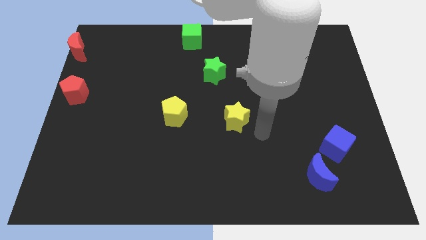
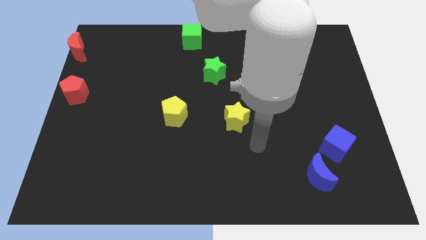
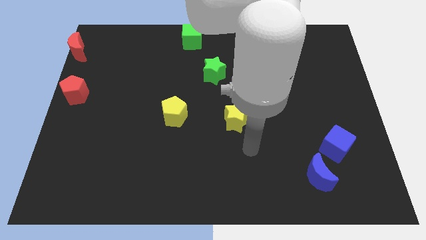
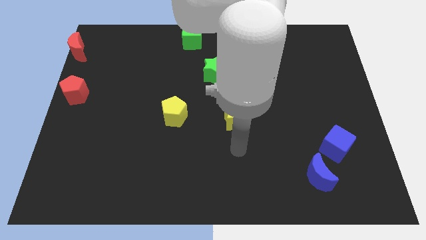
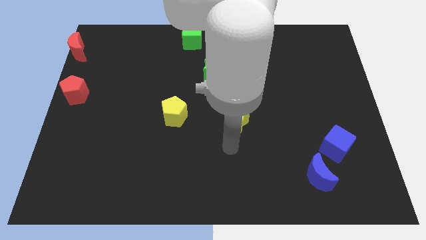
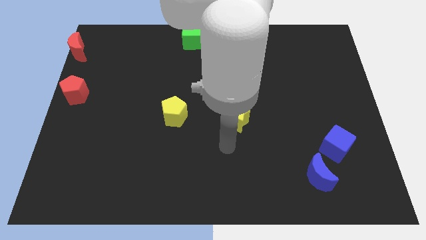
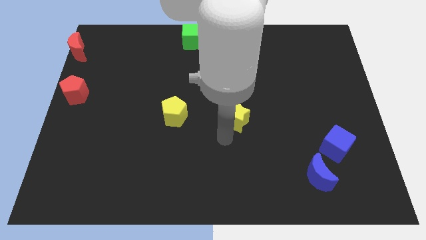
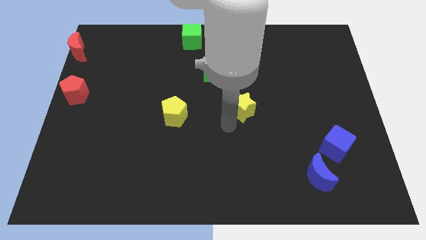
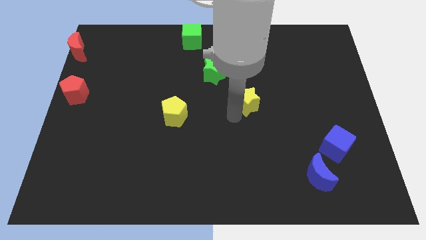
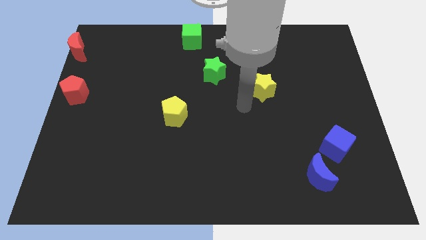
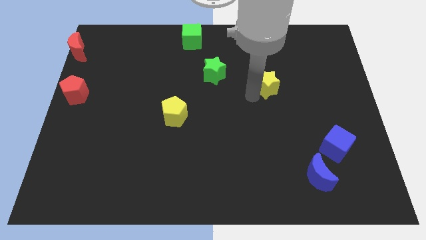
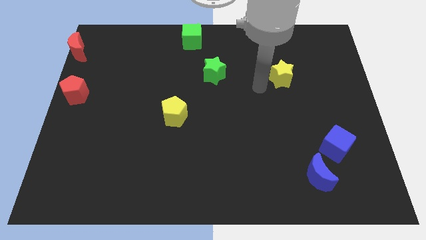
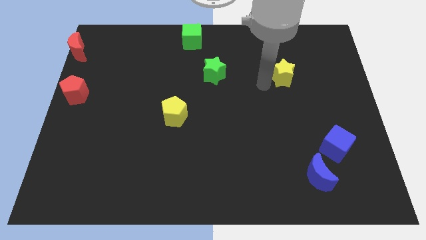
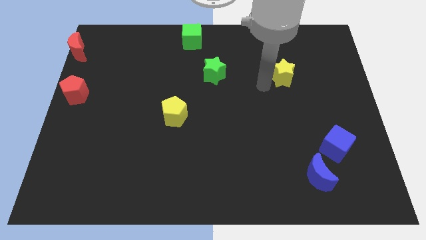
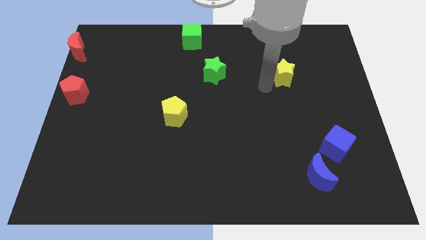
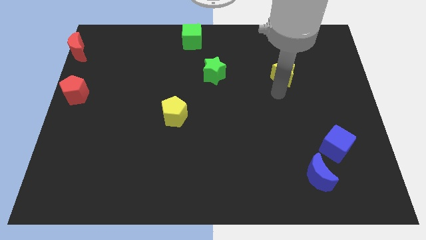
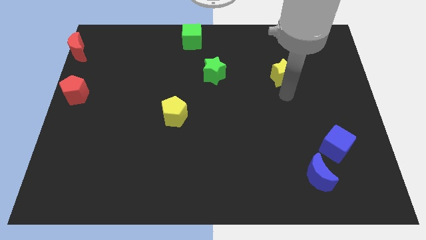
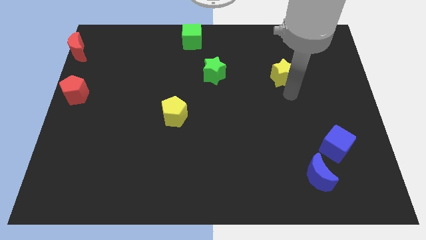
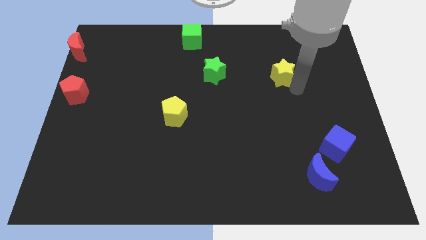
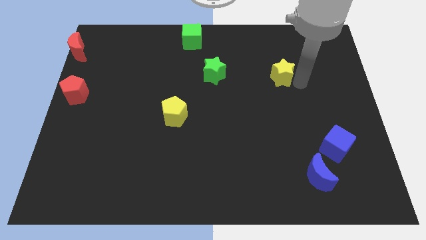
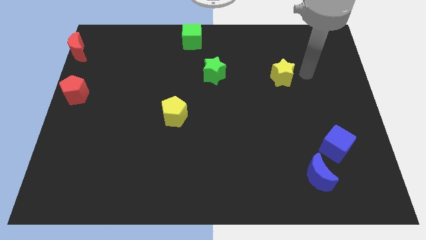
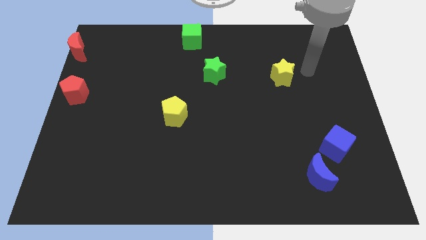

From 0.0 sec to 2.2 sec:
put the yellow star horizontally right to the green star

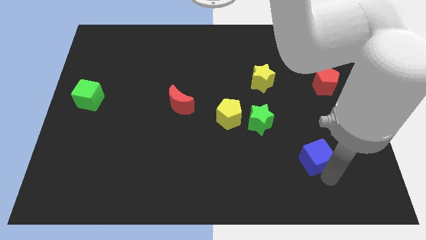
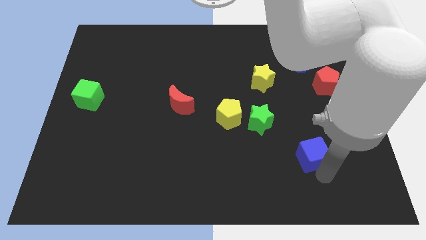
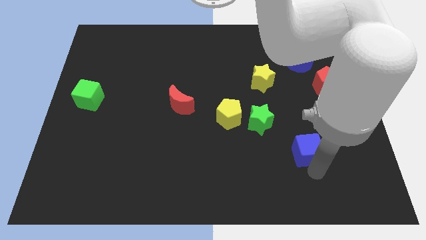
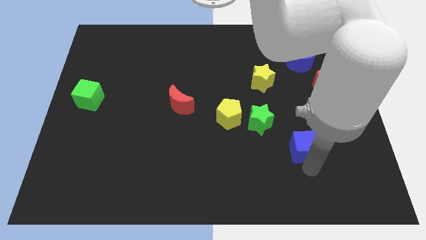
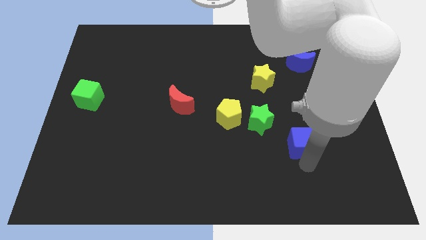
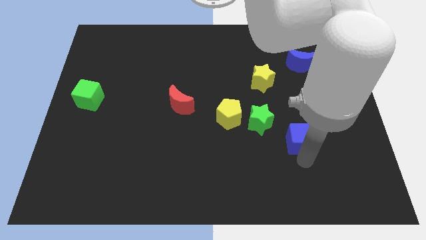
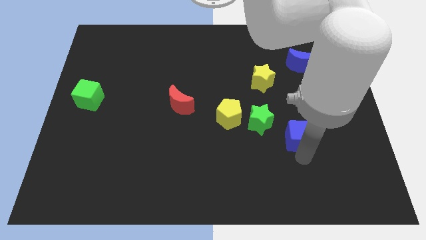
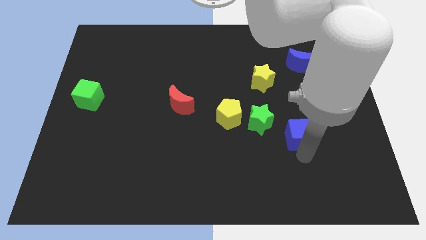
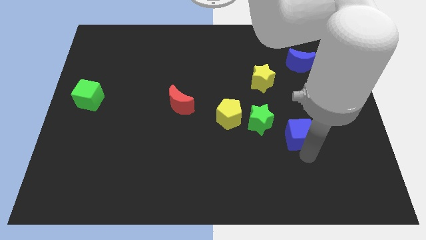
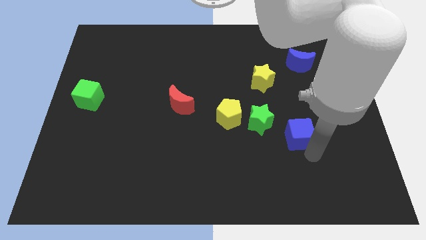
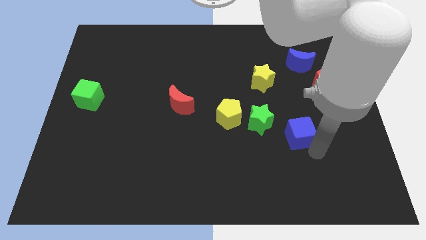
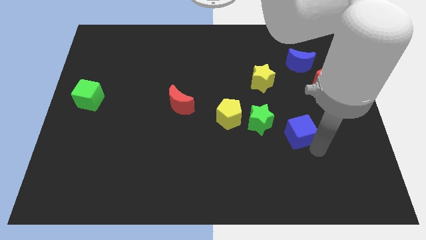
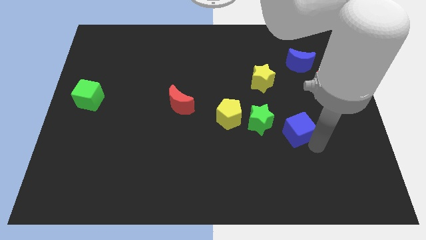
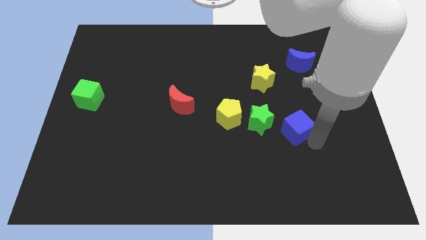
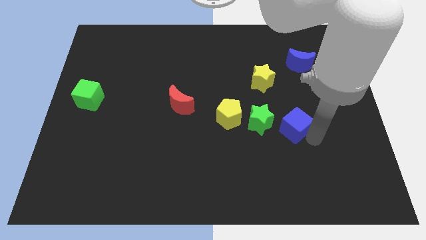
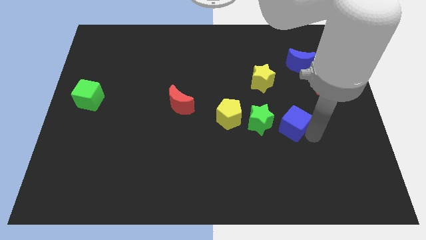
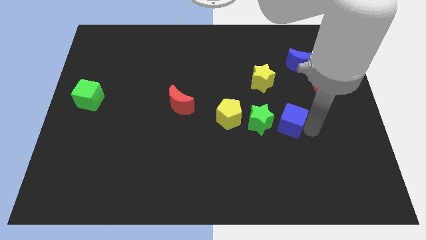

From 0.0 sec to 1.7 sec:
place the blue cube to the right of green star

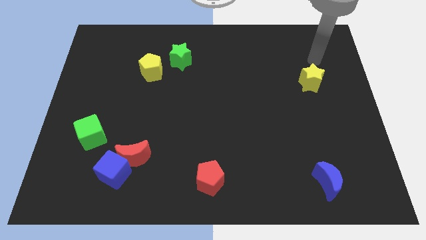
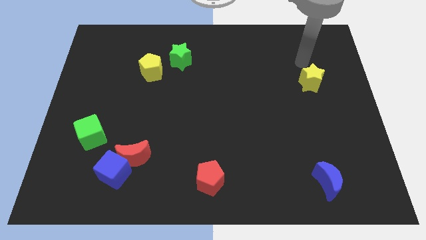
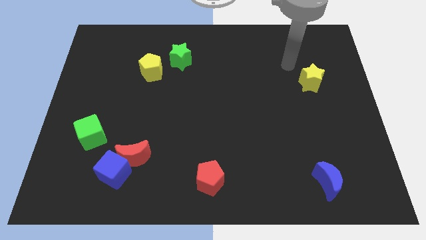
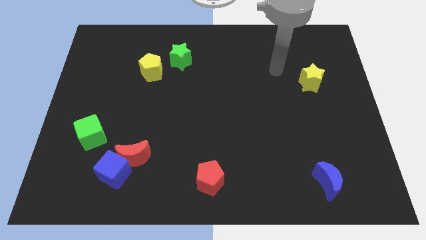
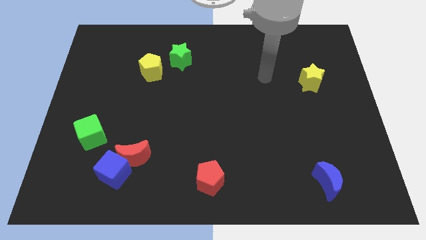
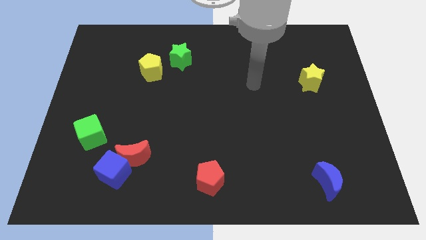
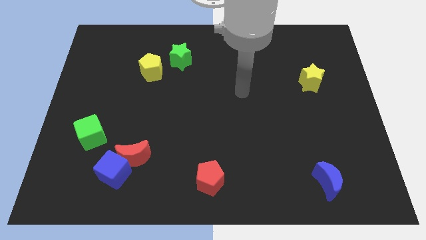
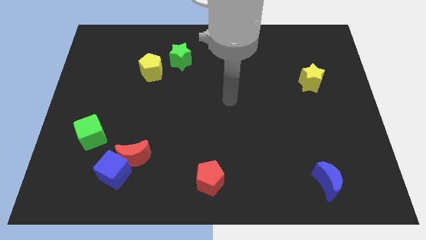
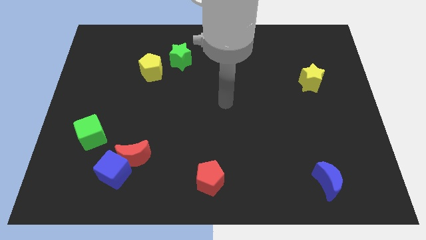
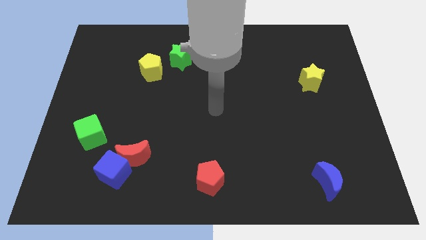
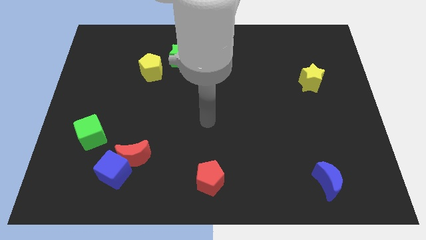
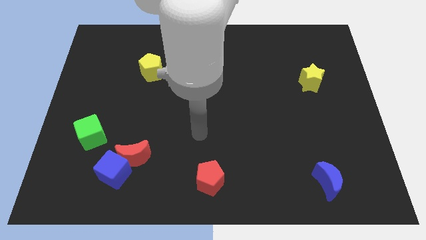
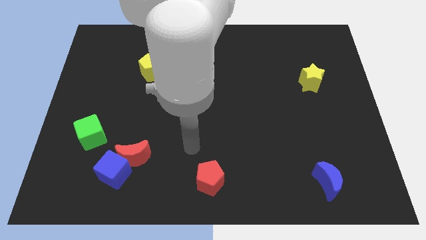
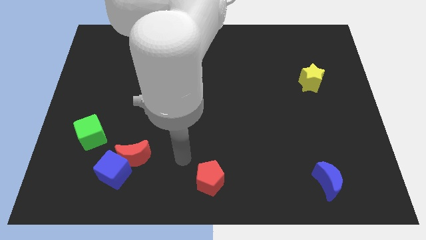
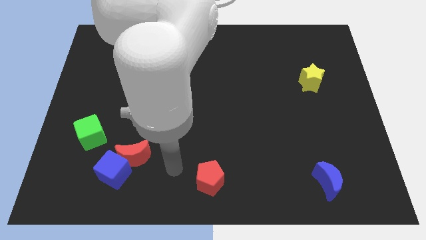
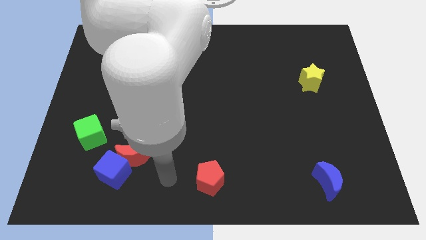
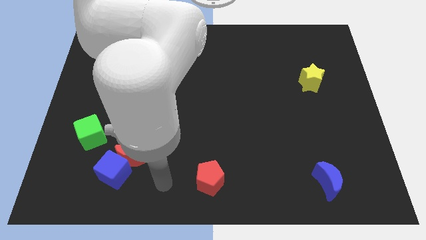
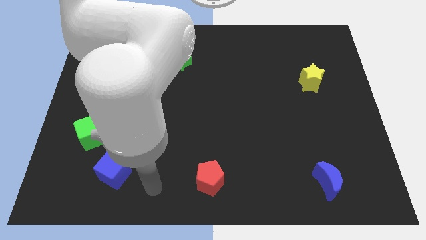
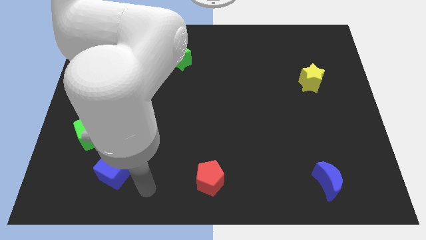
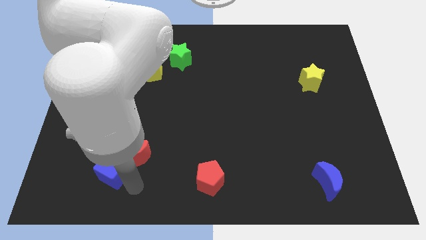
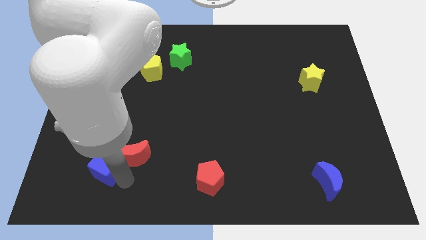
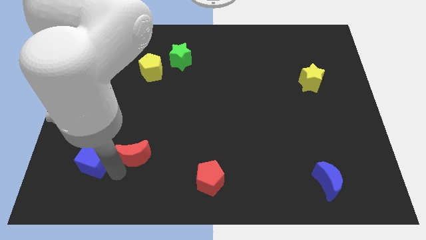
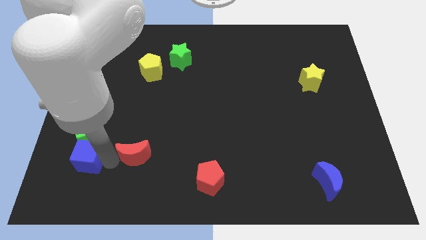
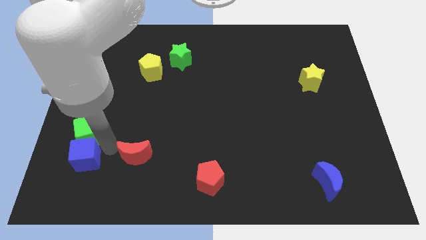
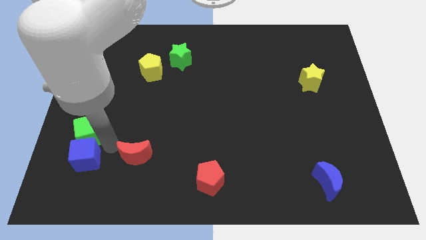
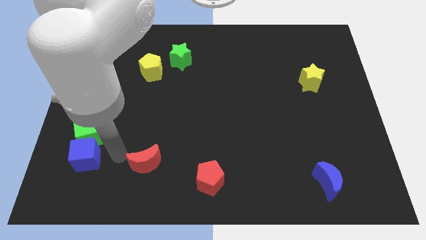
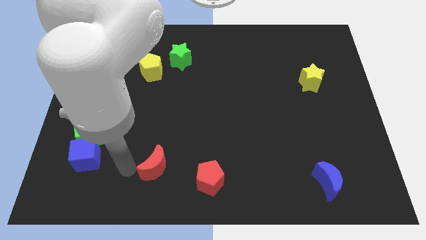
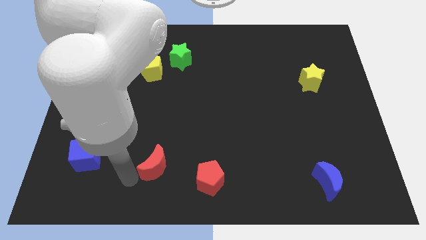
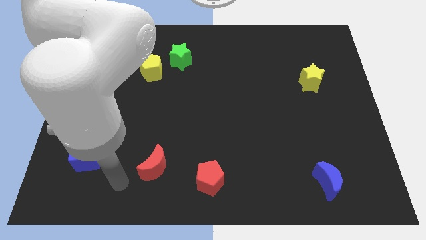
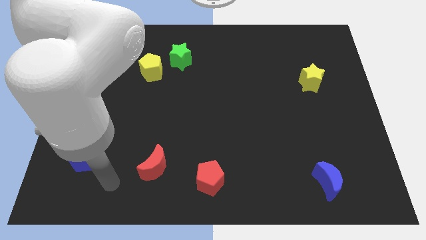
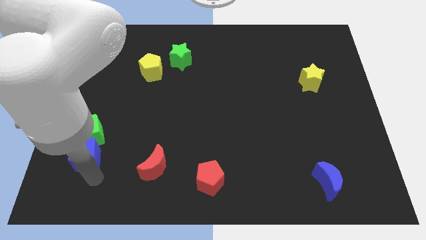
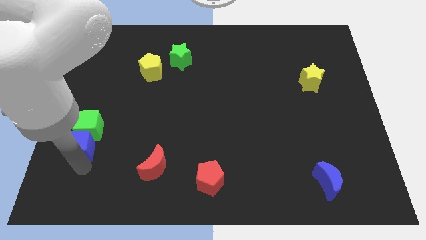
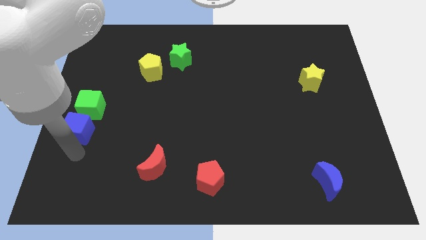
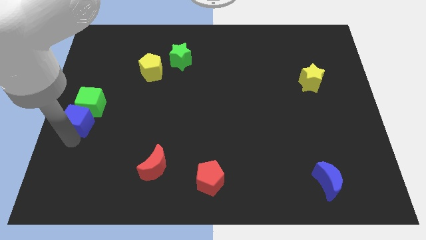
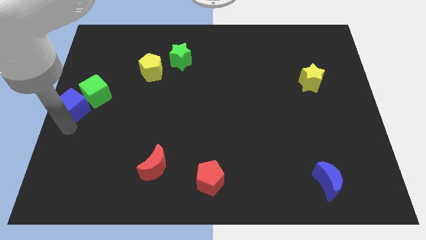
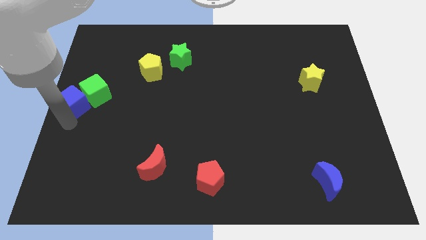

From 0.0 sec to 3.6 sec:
move the blue cube up slightly

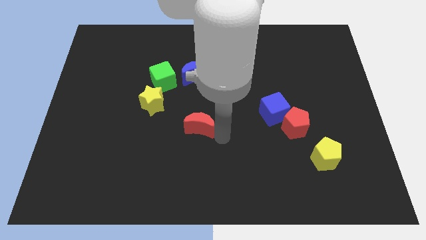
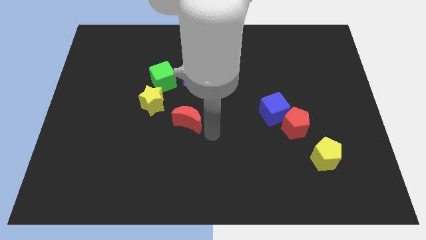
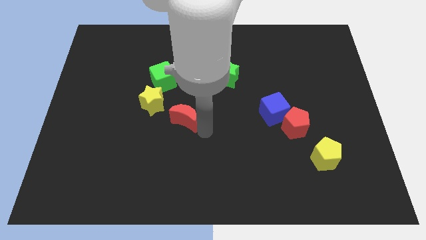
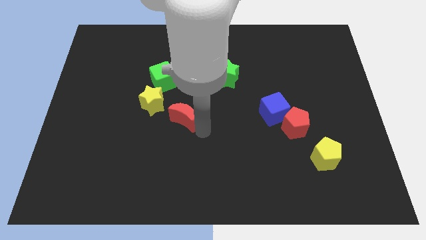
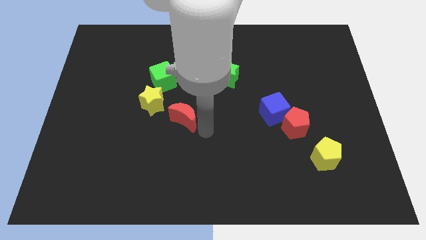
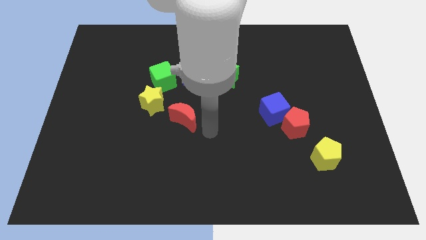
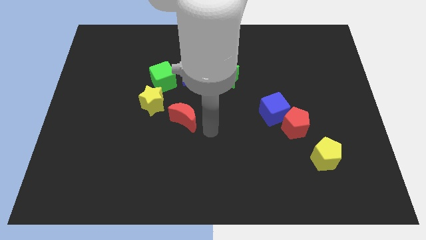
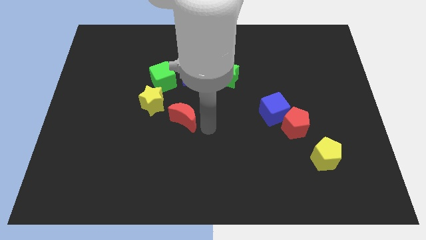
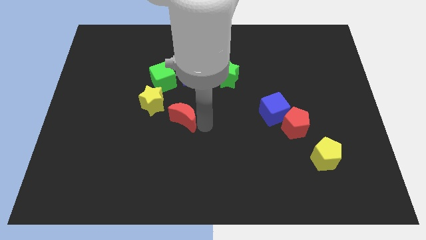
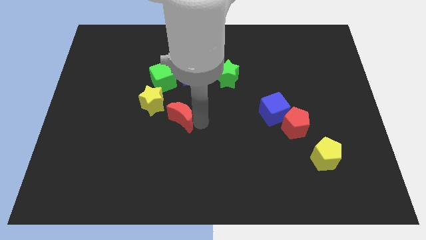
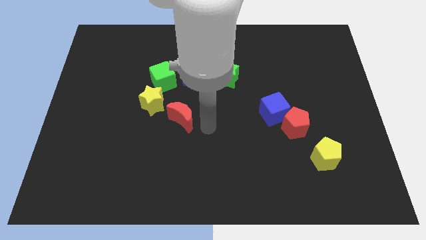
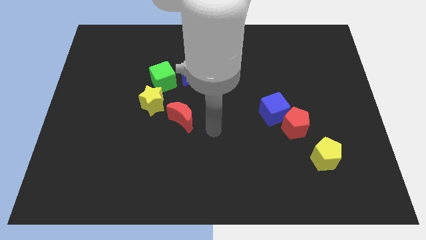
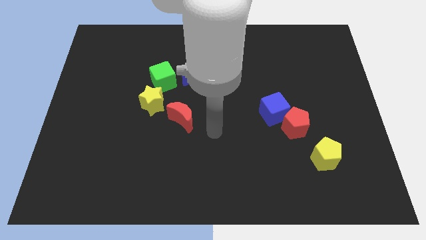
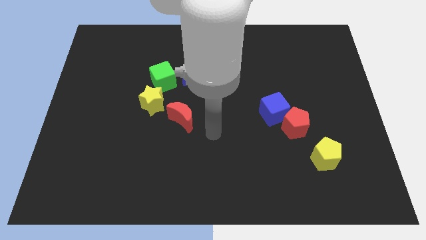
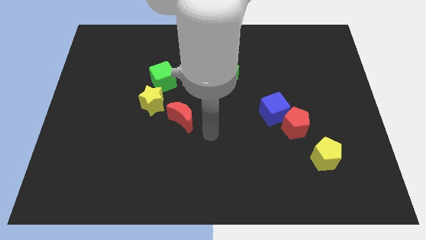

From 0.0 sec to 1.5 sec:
move the red crescent below the yellow star
